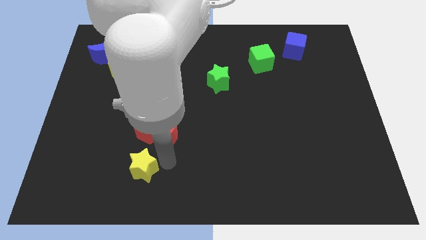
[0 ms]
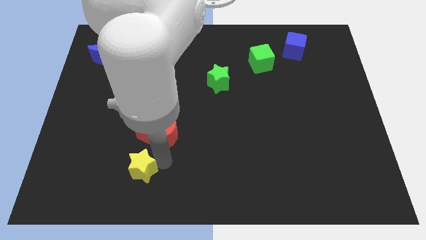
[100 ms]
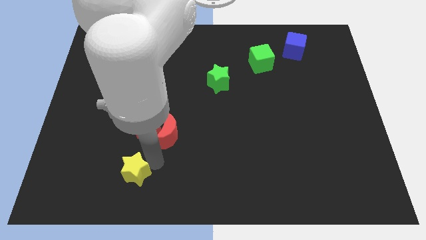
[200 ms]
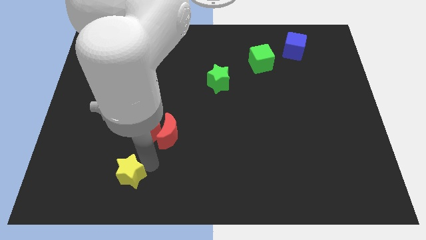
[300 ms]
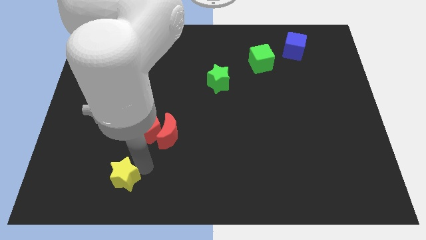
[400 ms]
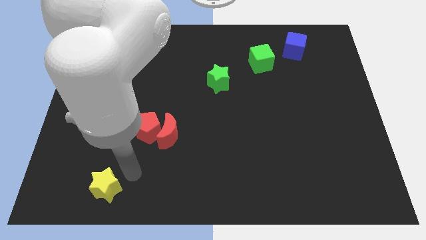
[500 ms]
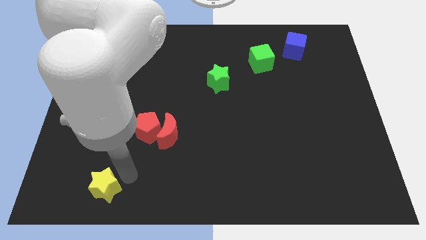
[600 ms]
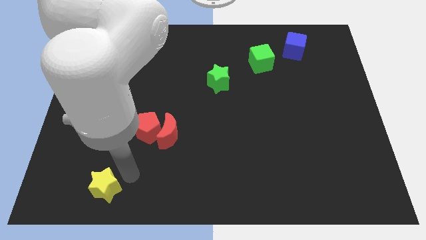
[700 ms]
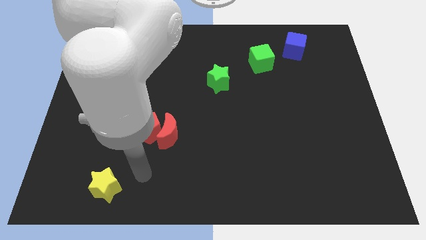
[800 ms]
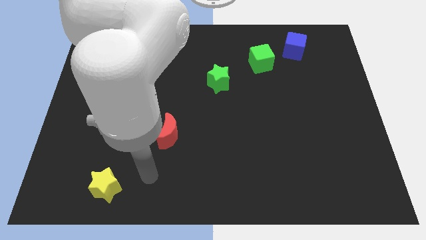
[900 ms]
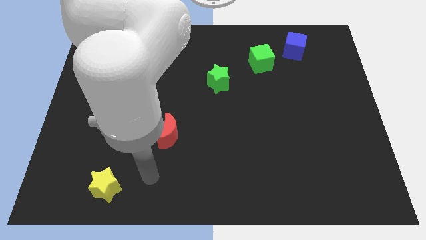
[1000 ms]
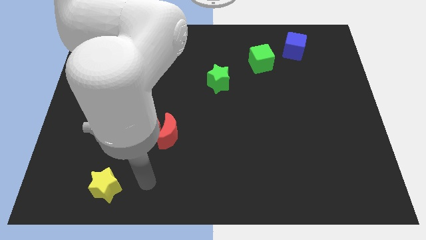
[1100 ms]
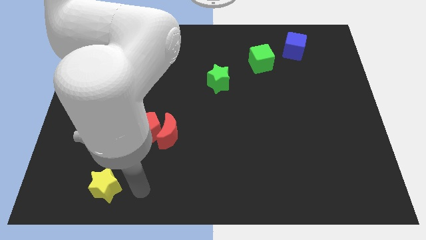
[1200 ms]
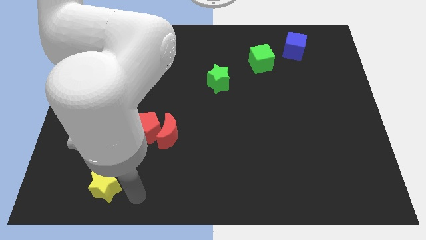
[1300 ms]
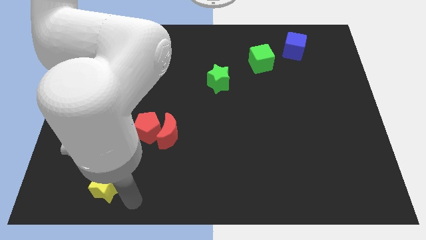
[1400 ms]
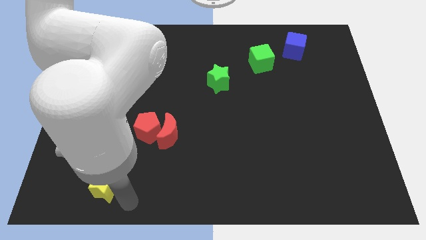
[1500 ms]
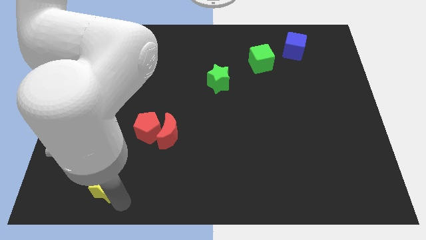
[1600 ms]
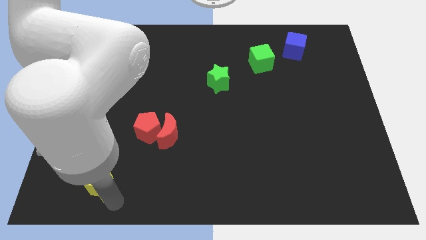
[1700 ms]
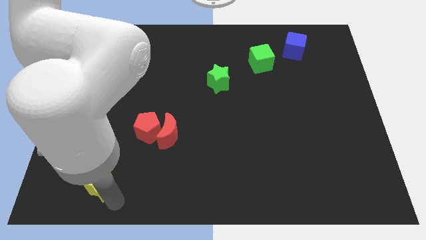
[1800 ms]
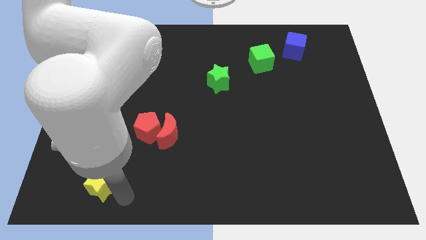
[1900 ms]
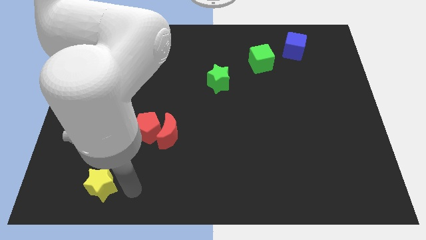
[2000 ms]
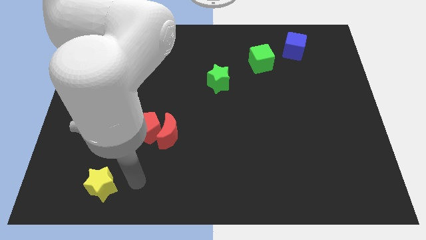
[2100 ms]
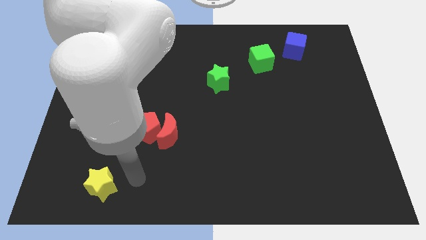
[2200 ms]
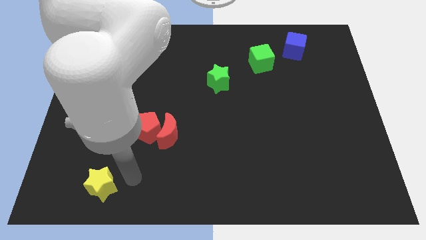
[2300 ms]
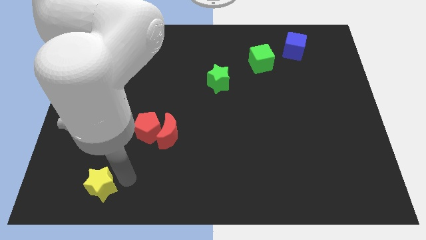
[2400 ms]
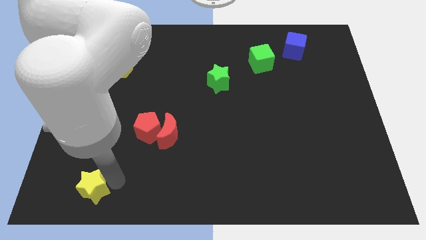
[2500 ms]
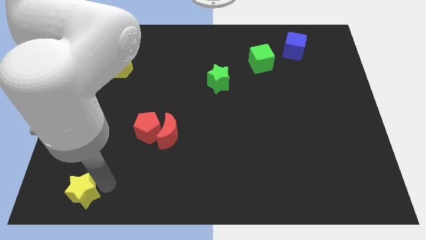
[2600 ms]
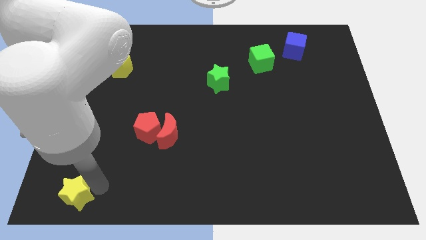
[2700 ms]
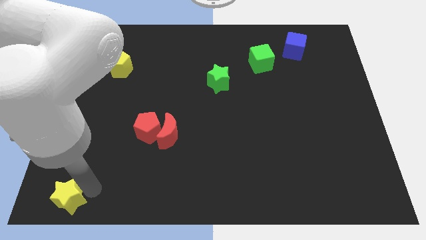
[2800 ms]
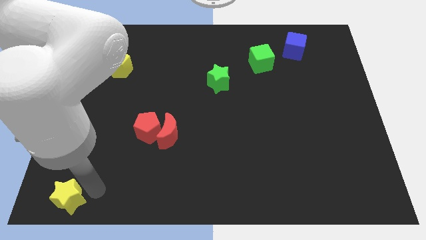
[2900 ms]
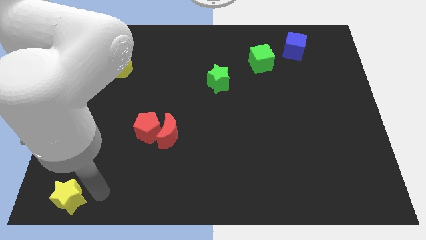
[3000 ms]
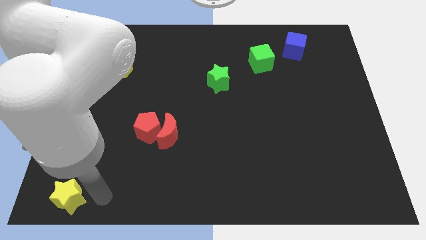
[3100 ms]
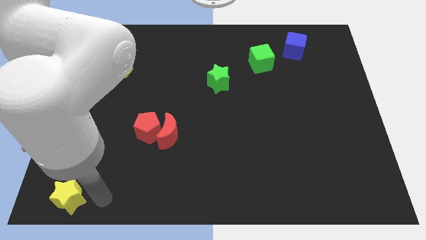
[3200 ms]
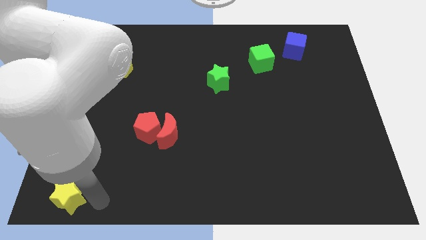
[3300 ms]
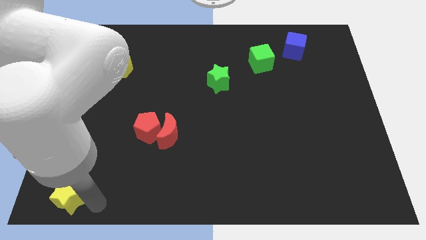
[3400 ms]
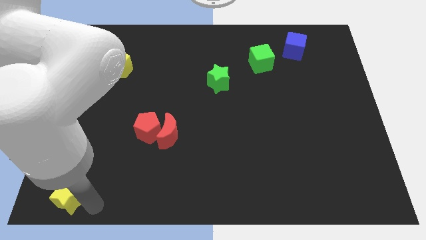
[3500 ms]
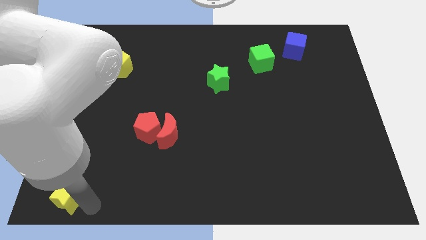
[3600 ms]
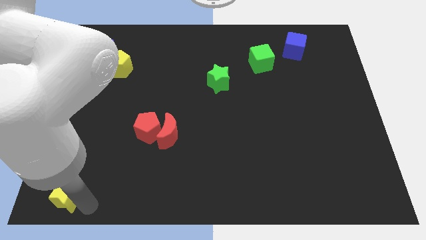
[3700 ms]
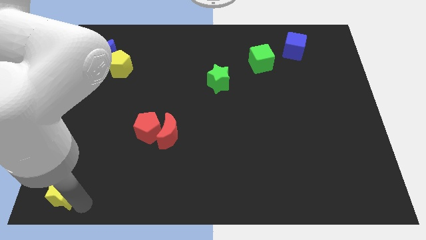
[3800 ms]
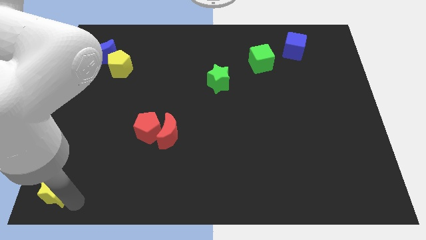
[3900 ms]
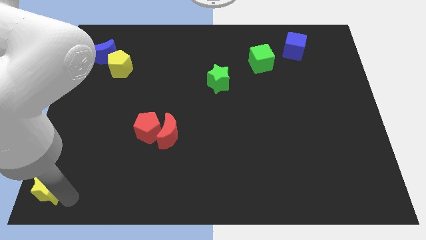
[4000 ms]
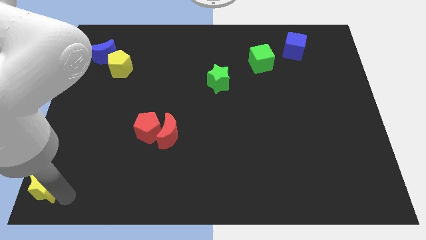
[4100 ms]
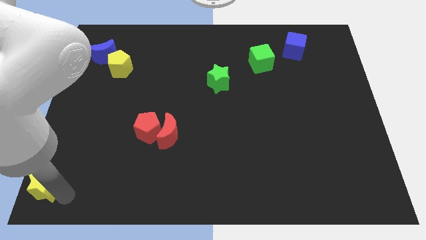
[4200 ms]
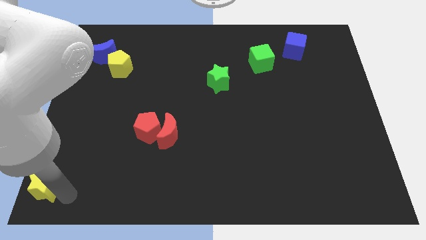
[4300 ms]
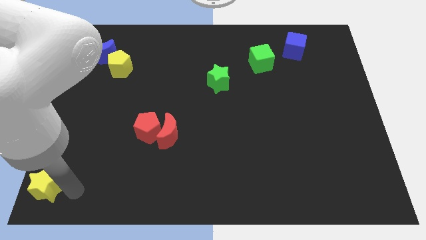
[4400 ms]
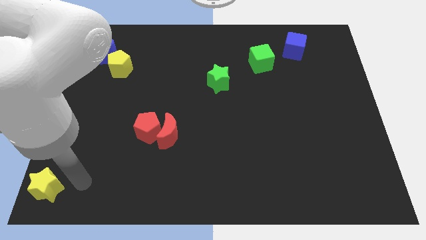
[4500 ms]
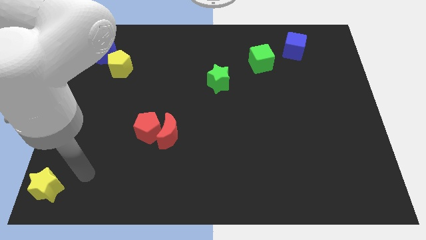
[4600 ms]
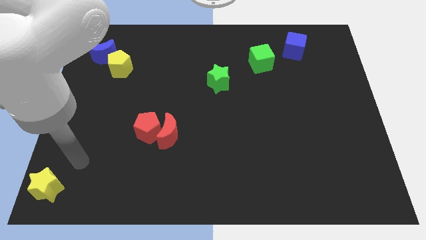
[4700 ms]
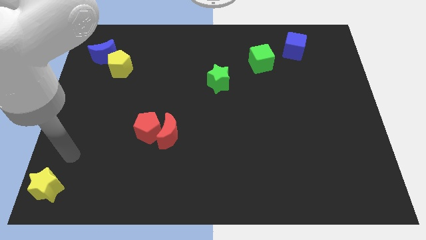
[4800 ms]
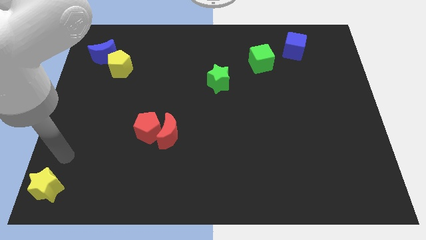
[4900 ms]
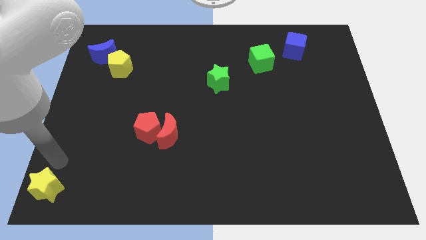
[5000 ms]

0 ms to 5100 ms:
move the yellow star to the bottom left corner of the board

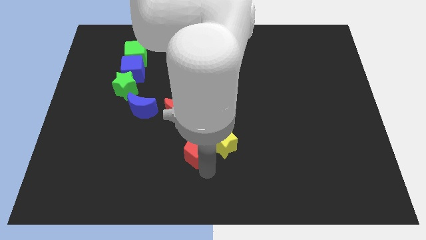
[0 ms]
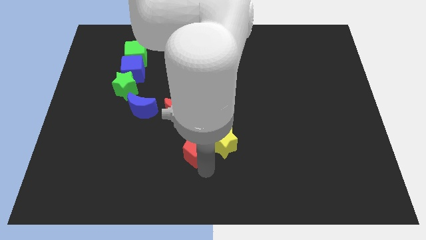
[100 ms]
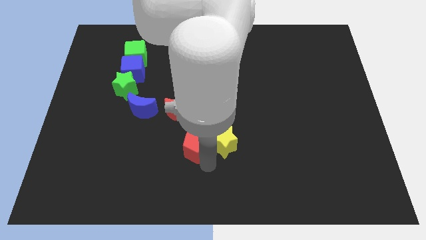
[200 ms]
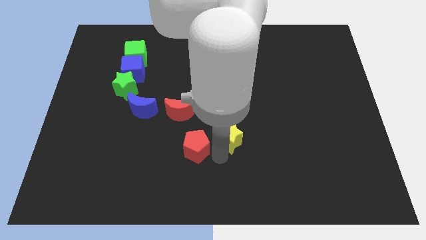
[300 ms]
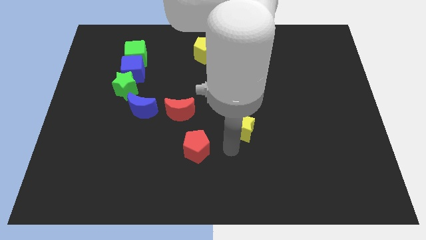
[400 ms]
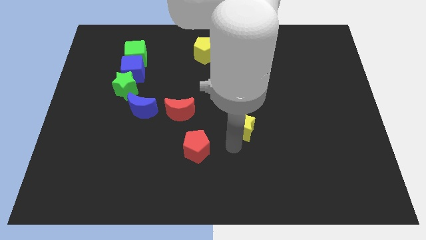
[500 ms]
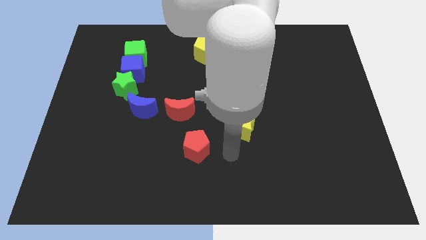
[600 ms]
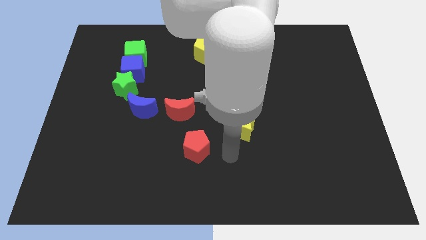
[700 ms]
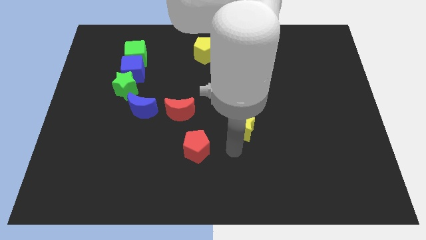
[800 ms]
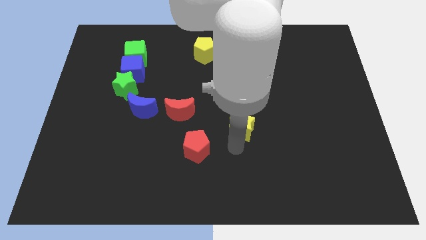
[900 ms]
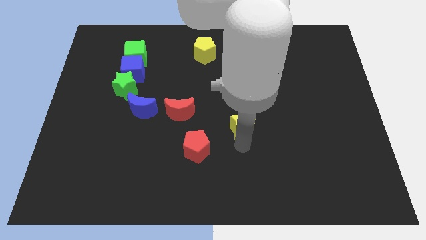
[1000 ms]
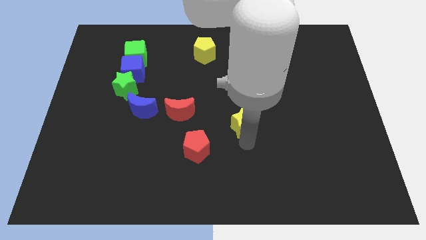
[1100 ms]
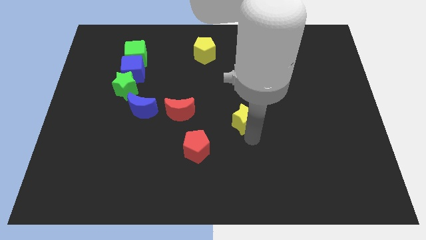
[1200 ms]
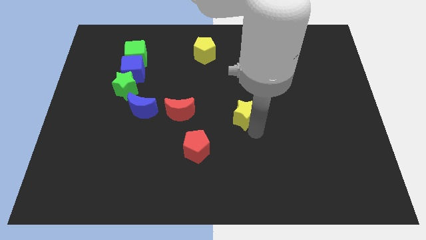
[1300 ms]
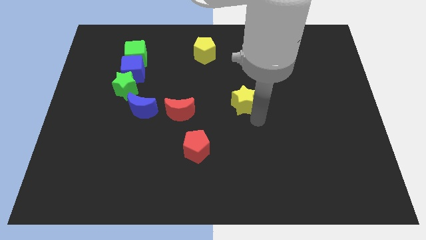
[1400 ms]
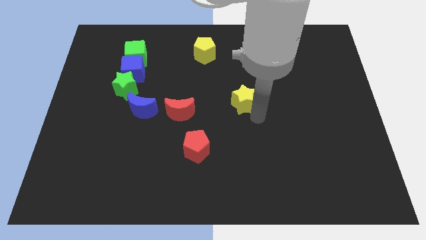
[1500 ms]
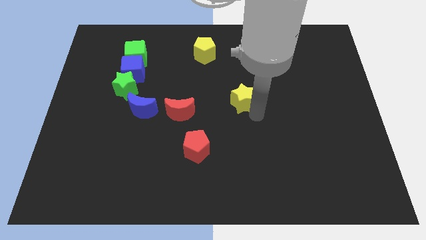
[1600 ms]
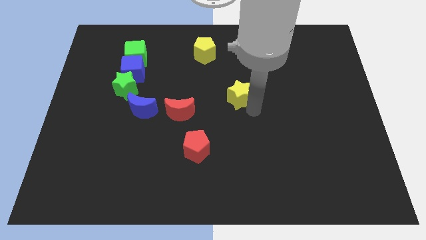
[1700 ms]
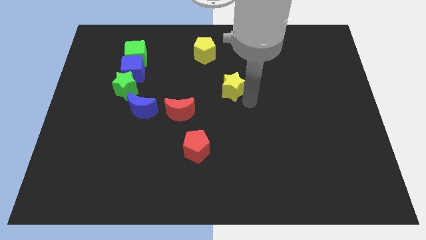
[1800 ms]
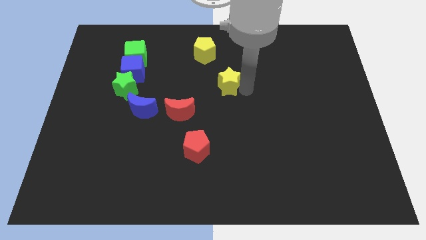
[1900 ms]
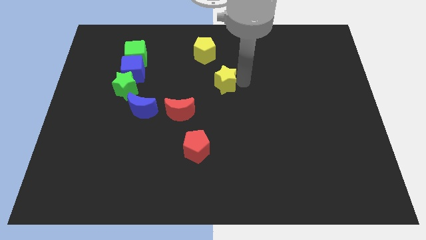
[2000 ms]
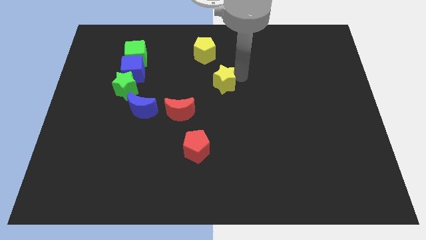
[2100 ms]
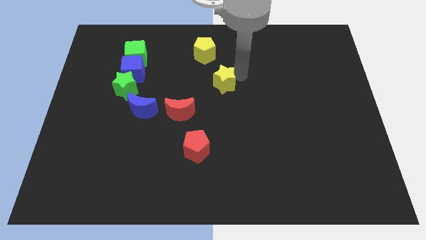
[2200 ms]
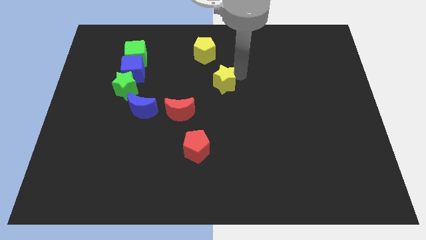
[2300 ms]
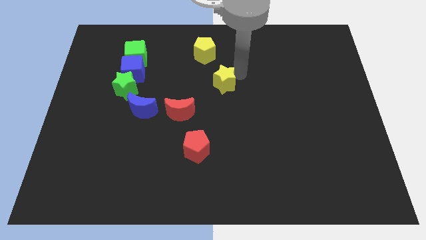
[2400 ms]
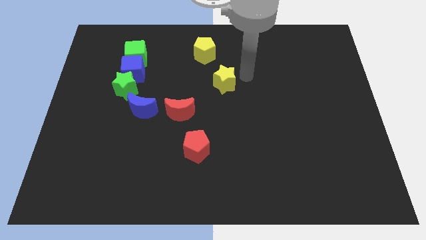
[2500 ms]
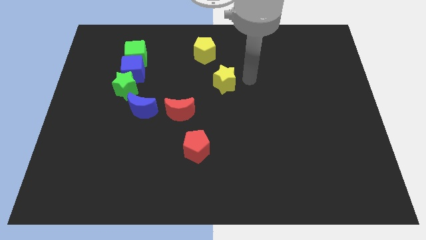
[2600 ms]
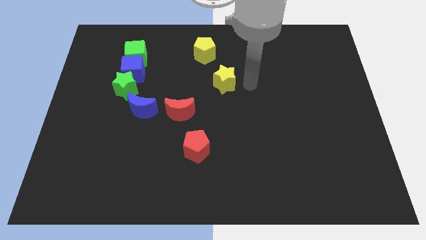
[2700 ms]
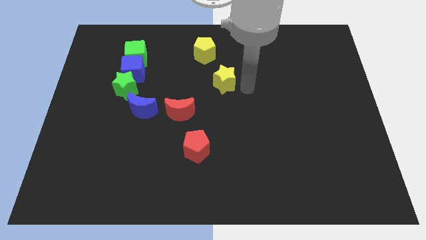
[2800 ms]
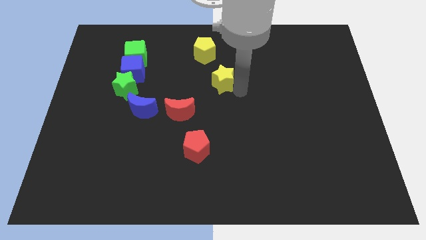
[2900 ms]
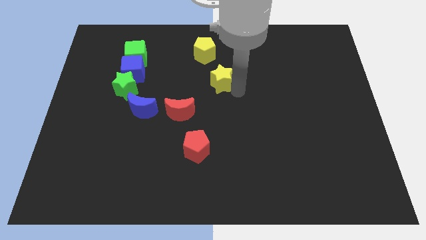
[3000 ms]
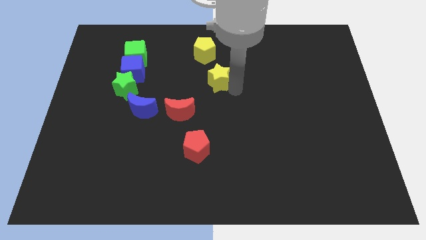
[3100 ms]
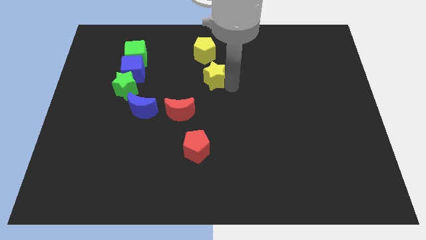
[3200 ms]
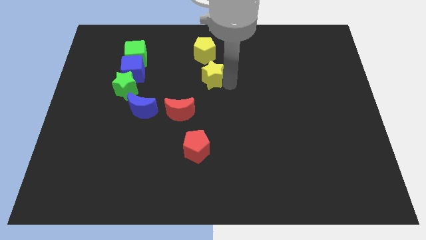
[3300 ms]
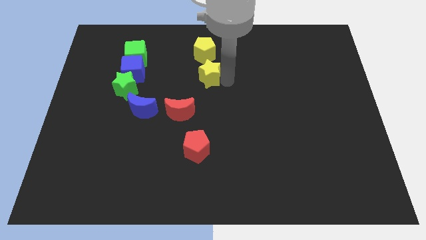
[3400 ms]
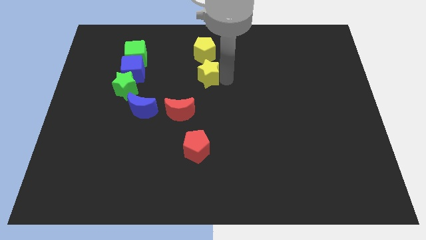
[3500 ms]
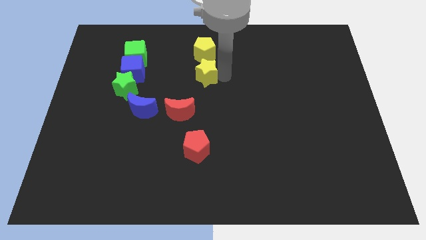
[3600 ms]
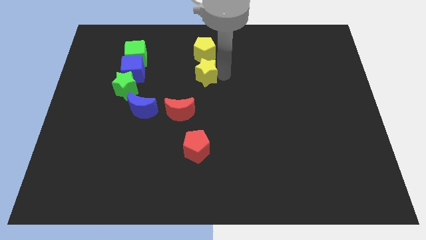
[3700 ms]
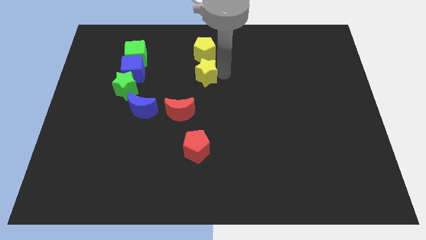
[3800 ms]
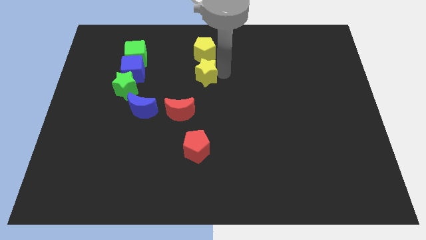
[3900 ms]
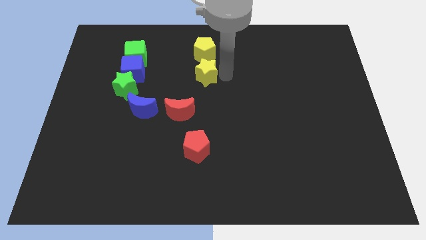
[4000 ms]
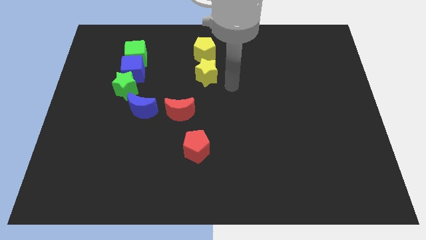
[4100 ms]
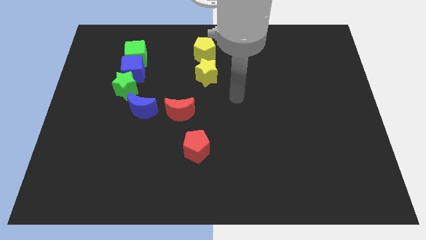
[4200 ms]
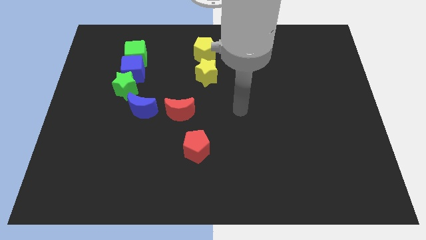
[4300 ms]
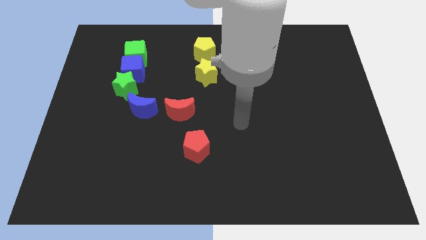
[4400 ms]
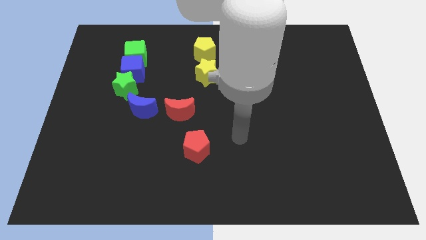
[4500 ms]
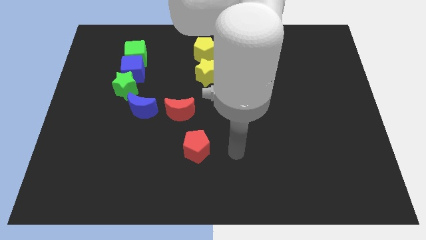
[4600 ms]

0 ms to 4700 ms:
place the yellow star below the yellow pentagon
